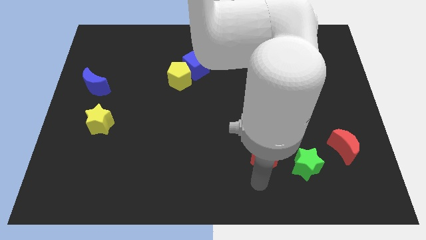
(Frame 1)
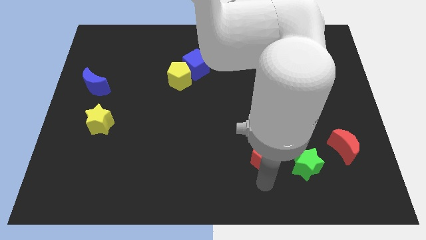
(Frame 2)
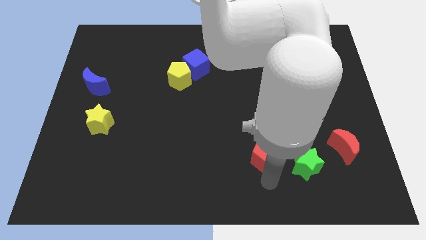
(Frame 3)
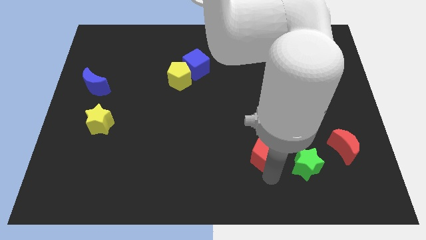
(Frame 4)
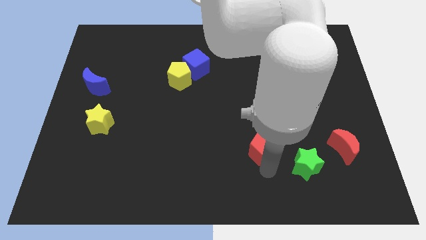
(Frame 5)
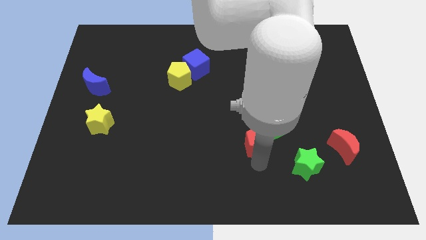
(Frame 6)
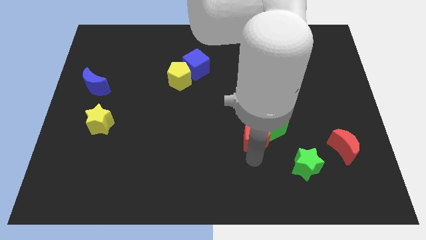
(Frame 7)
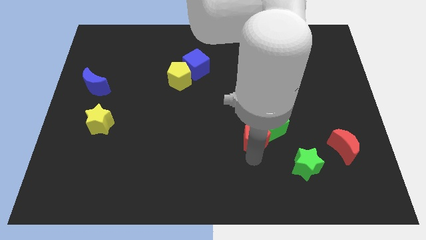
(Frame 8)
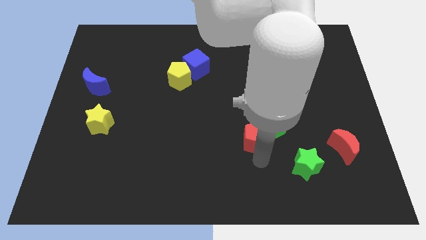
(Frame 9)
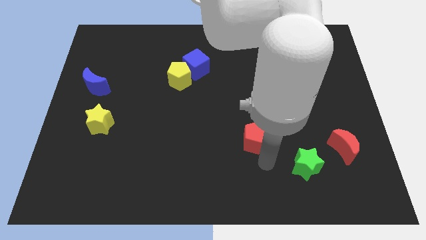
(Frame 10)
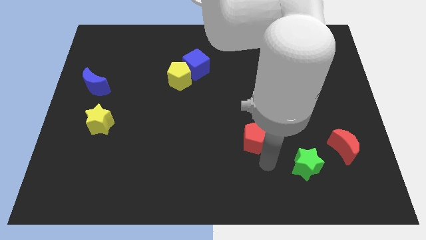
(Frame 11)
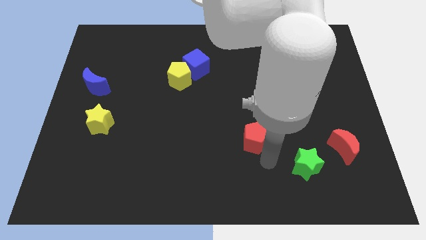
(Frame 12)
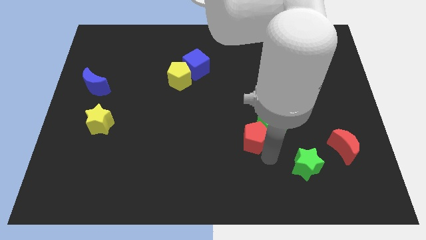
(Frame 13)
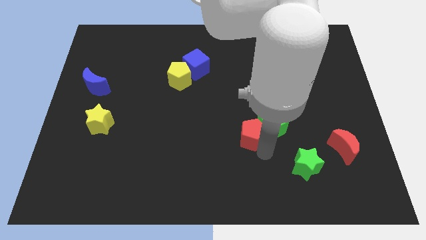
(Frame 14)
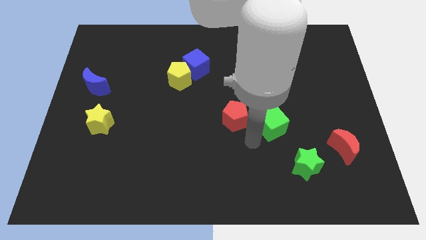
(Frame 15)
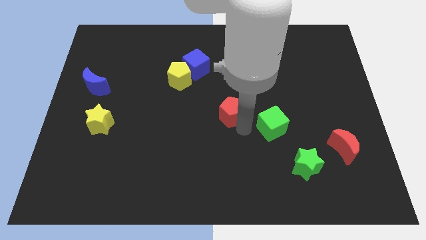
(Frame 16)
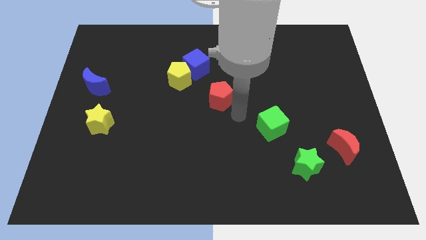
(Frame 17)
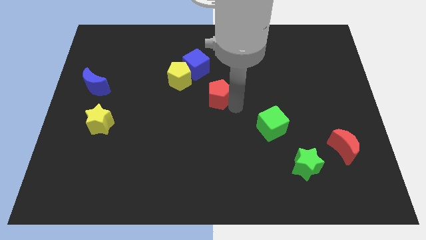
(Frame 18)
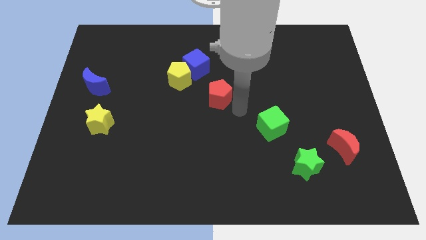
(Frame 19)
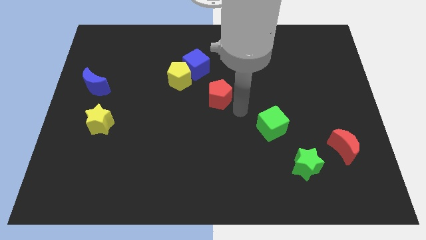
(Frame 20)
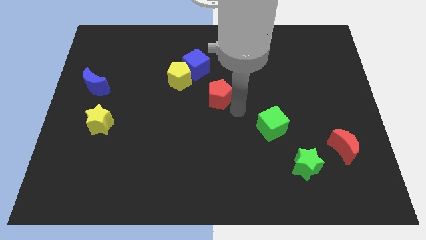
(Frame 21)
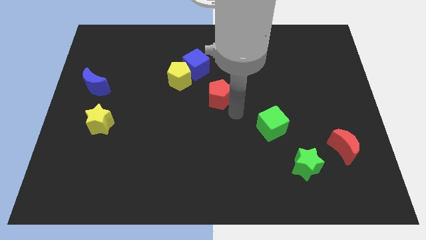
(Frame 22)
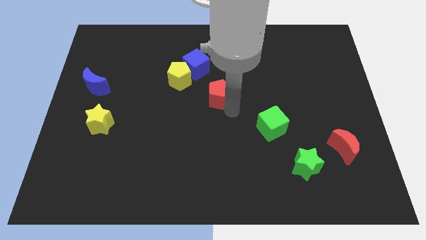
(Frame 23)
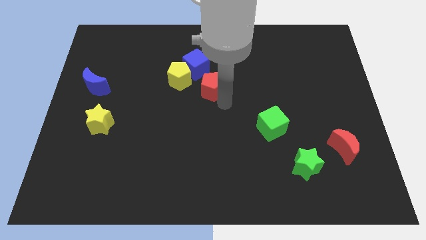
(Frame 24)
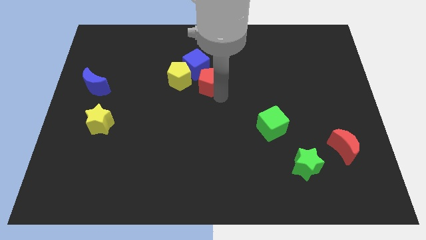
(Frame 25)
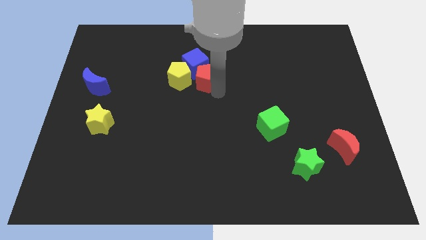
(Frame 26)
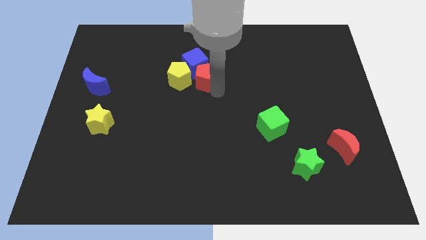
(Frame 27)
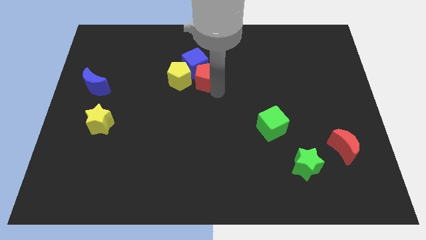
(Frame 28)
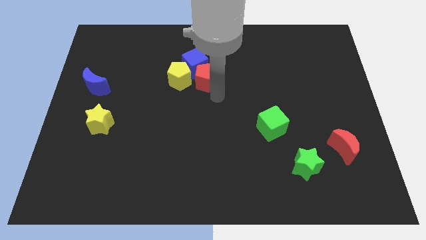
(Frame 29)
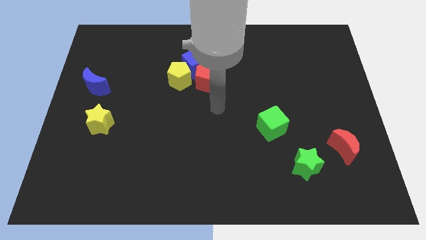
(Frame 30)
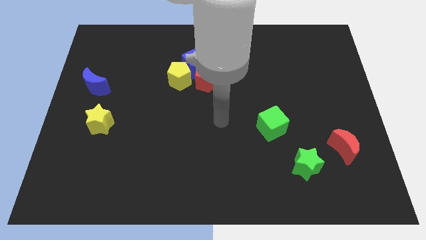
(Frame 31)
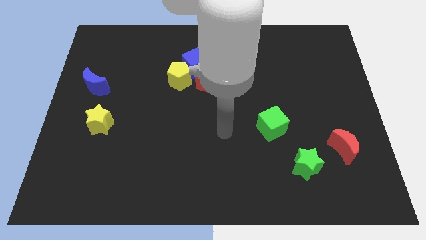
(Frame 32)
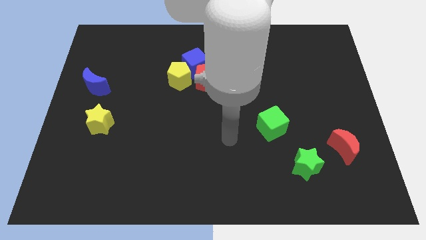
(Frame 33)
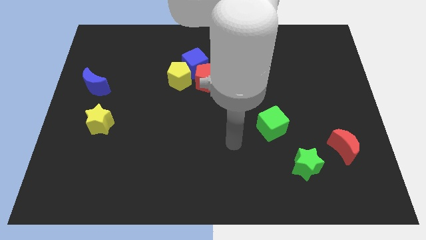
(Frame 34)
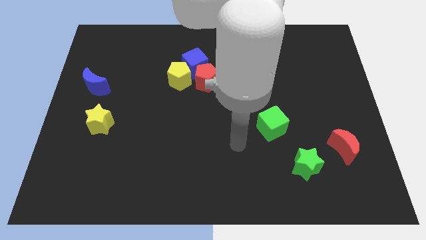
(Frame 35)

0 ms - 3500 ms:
place the red pentagon towards the bottom right side of the blue cube

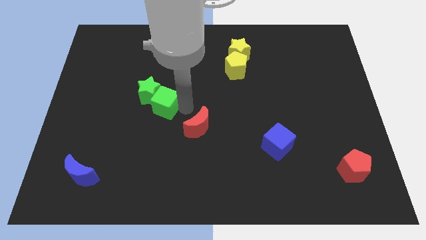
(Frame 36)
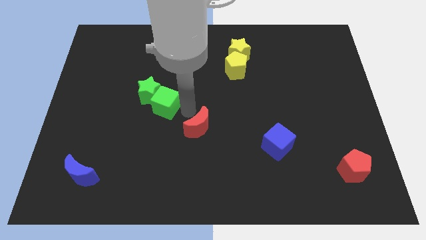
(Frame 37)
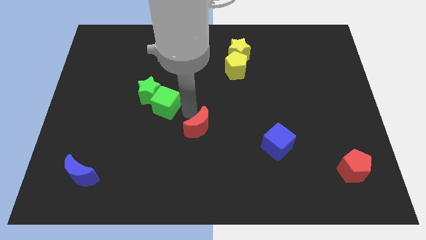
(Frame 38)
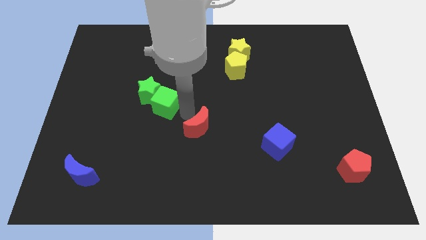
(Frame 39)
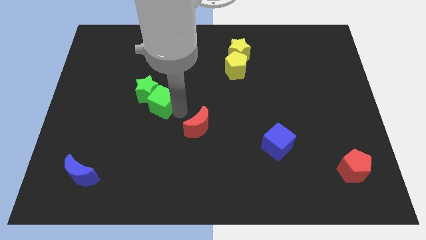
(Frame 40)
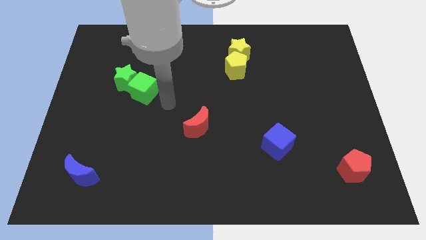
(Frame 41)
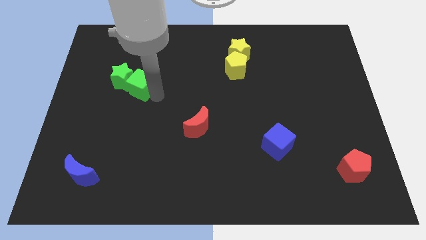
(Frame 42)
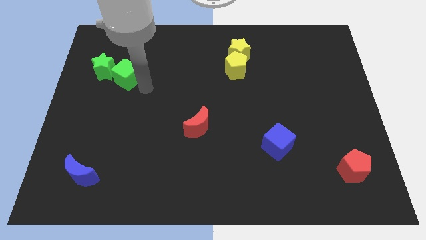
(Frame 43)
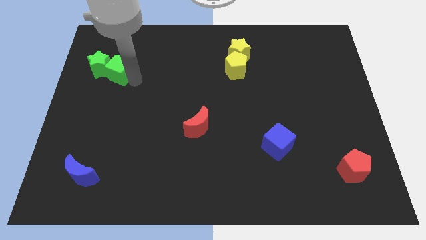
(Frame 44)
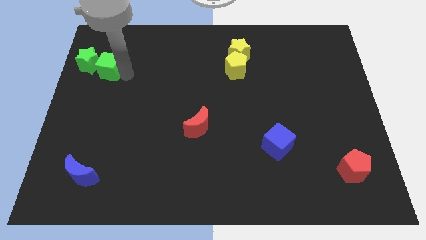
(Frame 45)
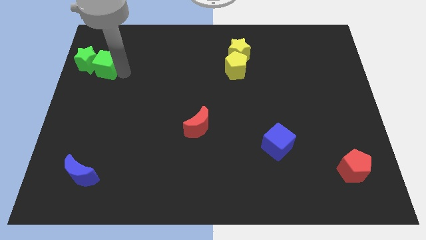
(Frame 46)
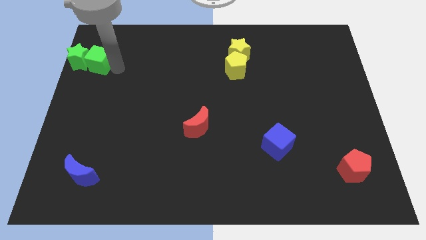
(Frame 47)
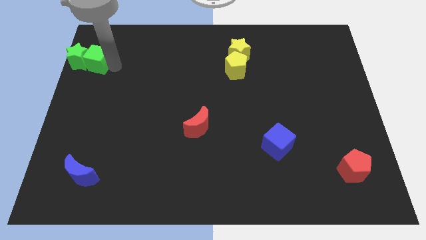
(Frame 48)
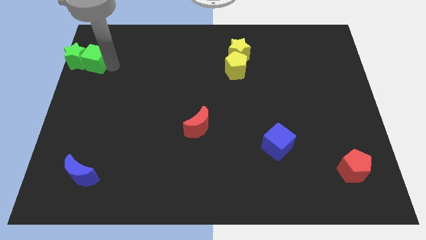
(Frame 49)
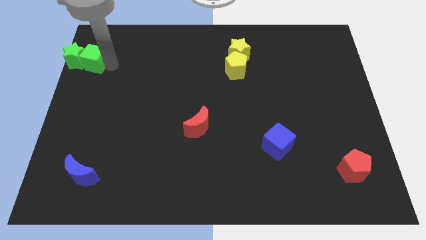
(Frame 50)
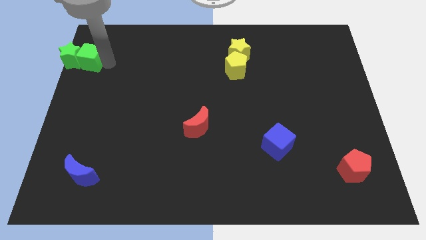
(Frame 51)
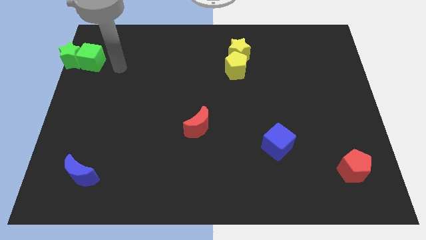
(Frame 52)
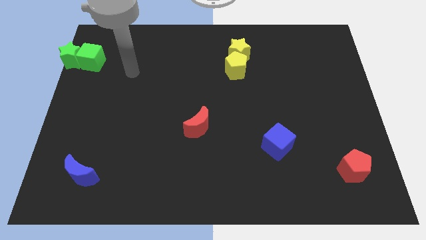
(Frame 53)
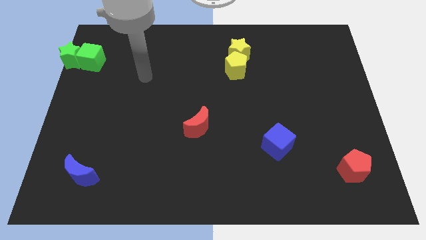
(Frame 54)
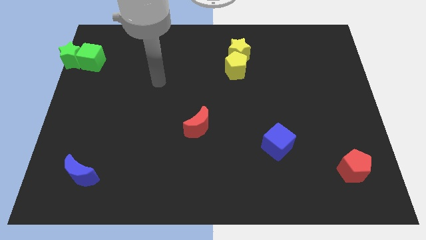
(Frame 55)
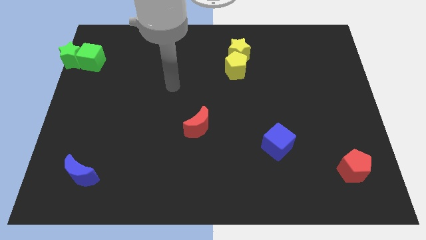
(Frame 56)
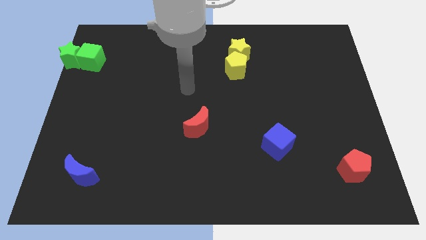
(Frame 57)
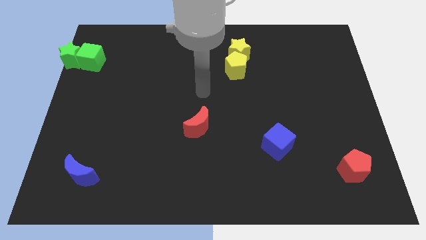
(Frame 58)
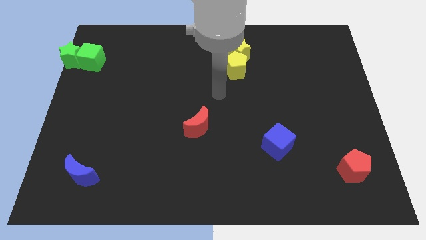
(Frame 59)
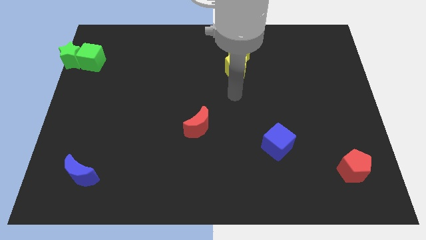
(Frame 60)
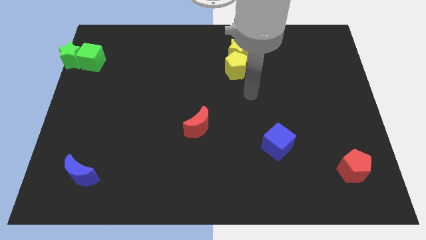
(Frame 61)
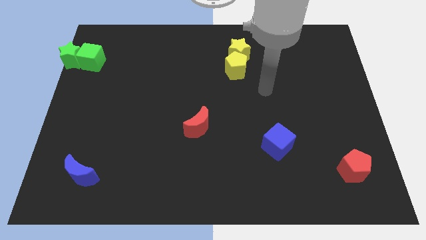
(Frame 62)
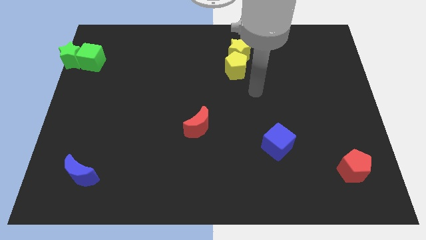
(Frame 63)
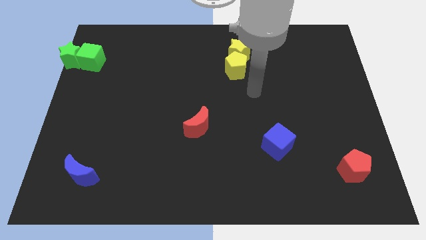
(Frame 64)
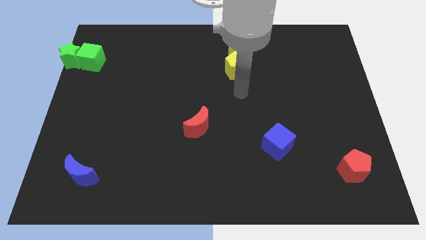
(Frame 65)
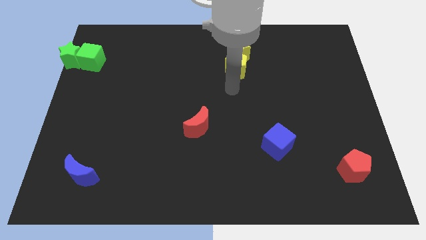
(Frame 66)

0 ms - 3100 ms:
place the green star and the green cube at the top left

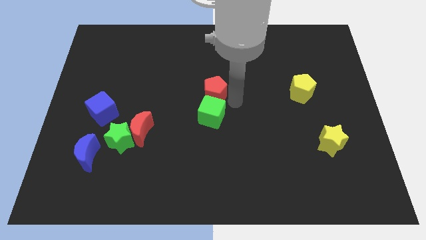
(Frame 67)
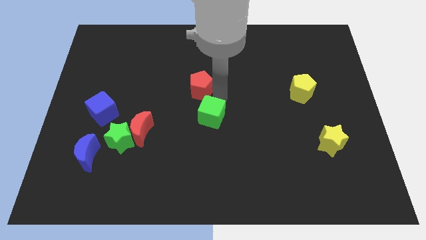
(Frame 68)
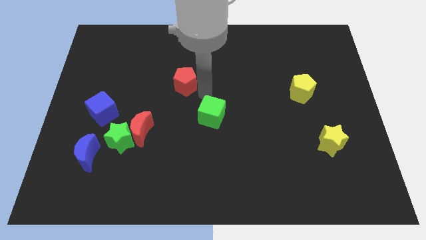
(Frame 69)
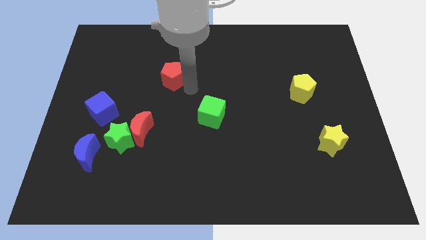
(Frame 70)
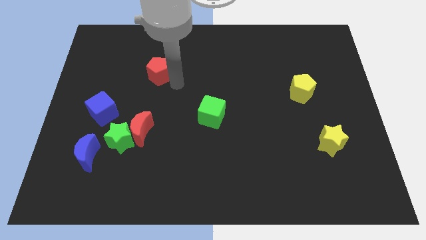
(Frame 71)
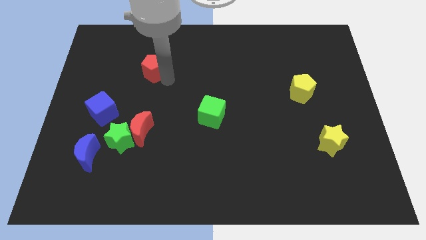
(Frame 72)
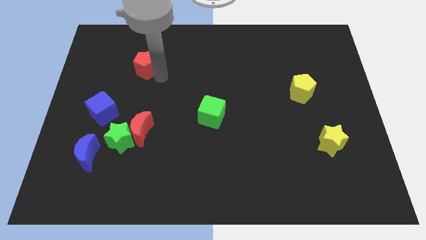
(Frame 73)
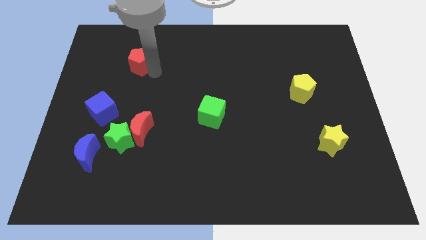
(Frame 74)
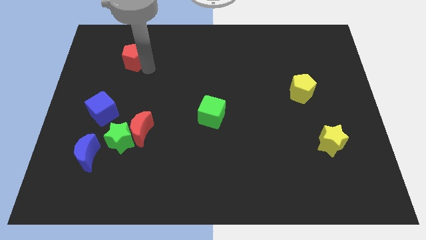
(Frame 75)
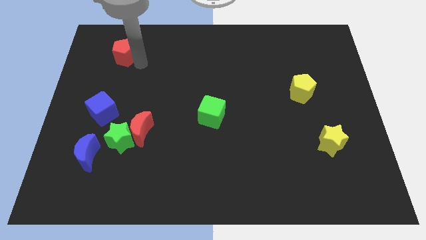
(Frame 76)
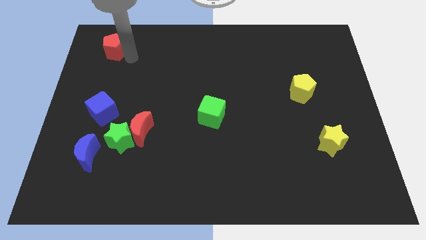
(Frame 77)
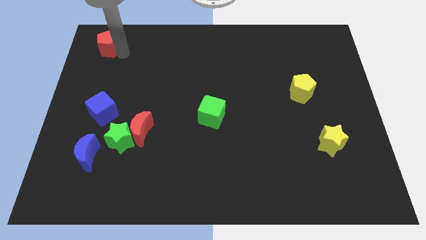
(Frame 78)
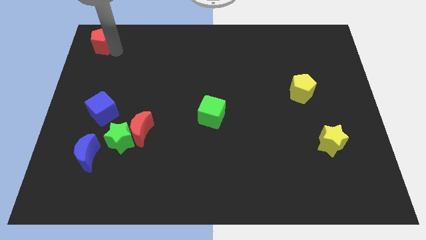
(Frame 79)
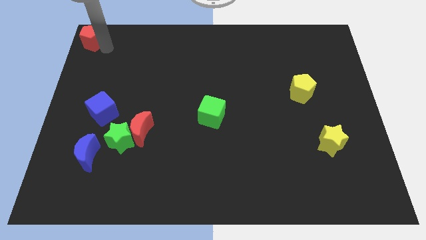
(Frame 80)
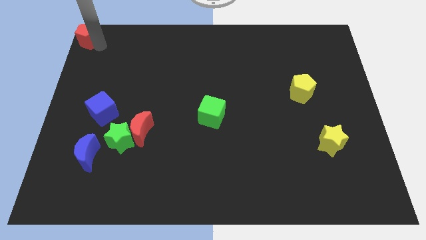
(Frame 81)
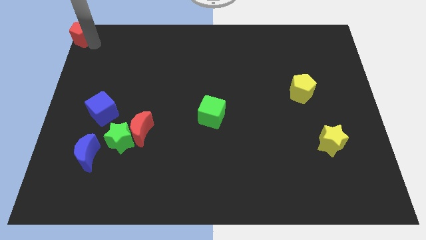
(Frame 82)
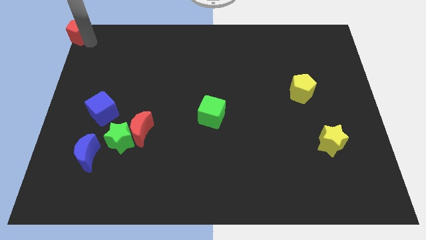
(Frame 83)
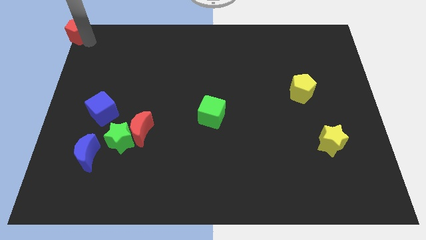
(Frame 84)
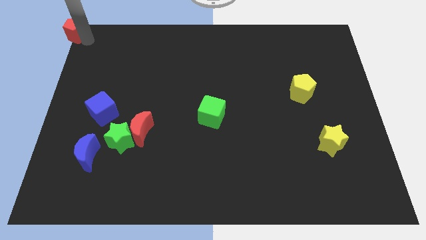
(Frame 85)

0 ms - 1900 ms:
push the red pentagon to the top left corner of the board

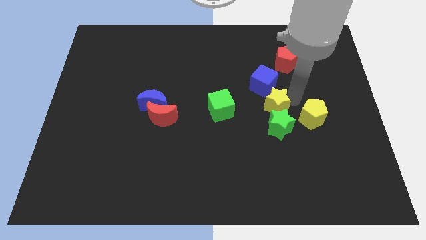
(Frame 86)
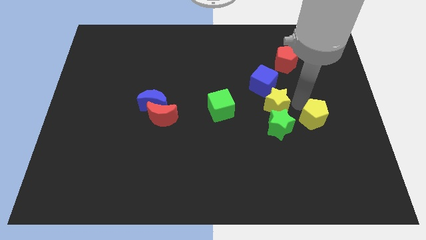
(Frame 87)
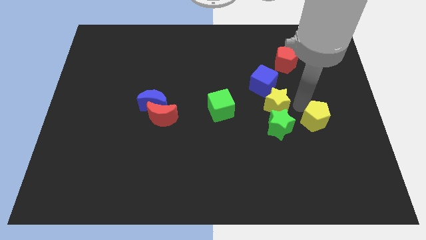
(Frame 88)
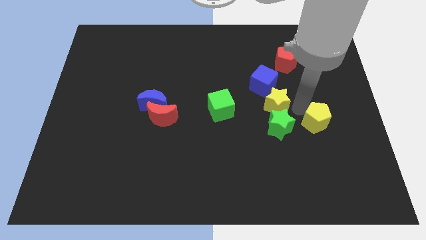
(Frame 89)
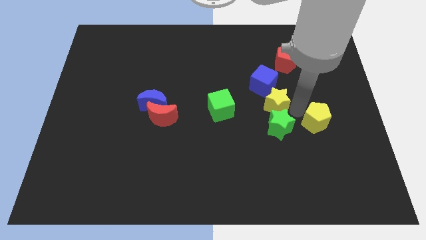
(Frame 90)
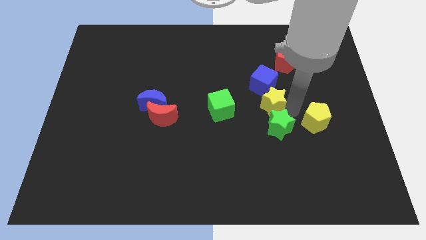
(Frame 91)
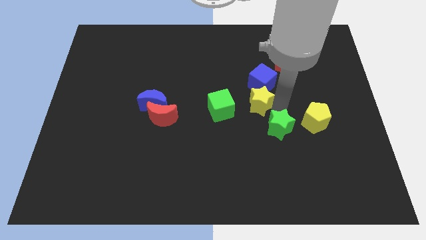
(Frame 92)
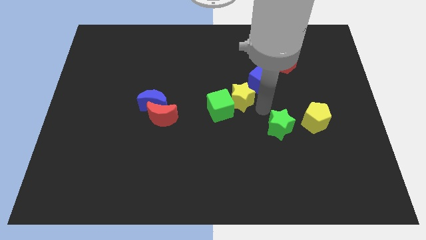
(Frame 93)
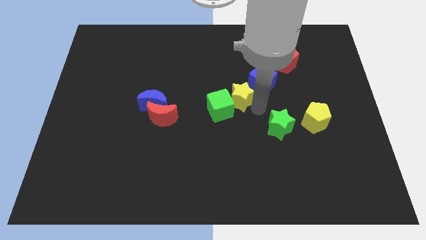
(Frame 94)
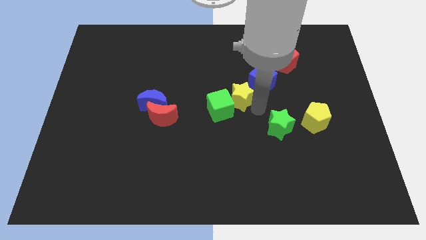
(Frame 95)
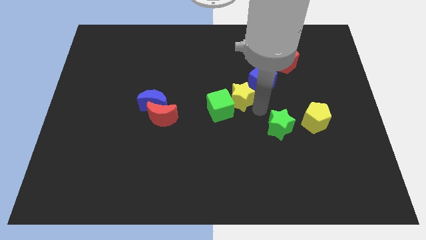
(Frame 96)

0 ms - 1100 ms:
place the yellow star between the green cube and blue cube
